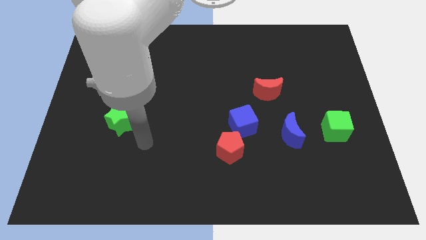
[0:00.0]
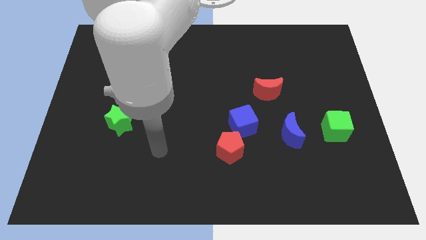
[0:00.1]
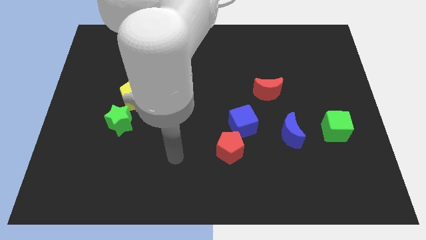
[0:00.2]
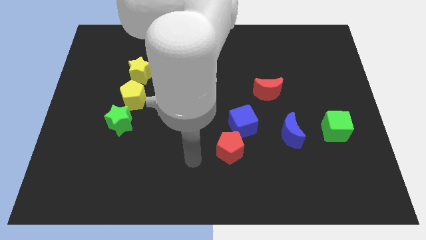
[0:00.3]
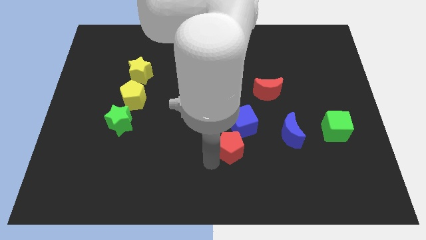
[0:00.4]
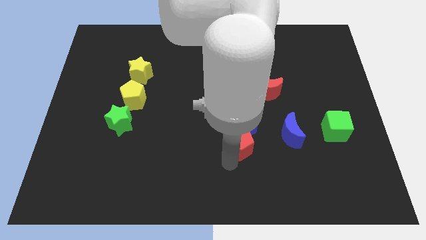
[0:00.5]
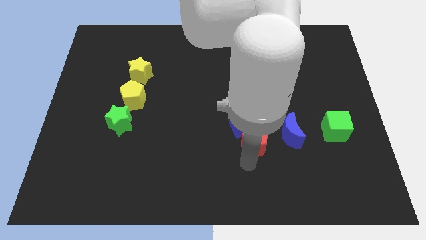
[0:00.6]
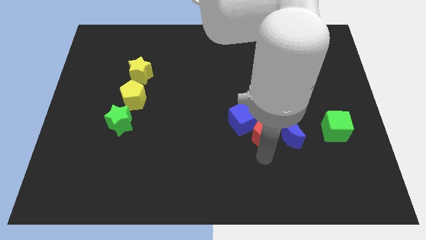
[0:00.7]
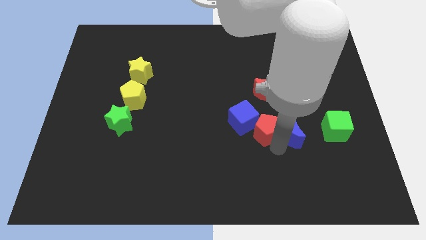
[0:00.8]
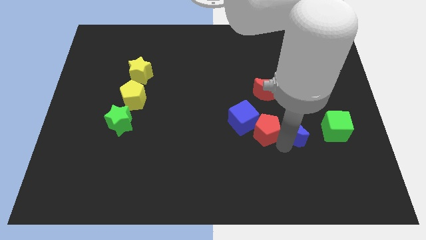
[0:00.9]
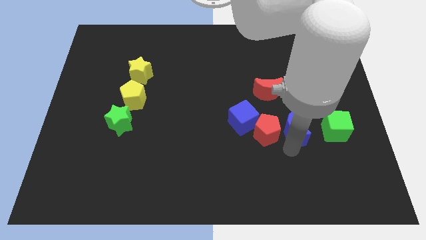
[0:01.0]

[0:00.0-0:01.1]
place the red pentagon in between the blue cube and blue moon

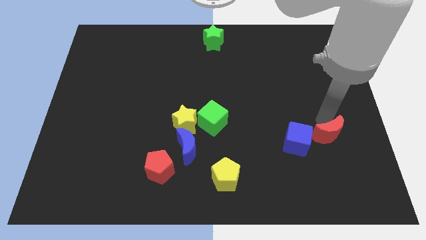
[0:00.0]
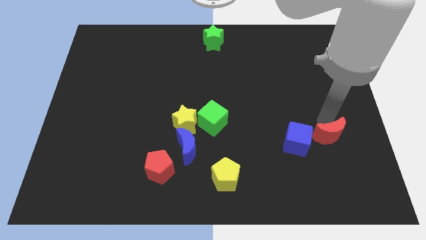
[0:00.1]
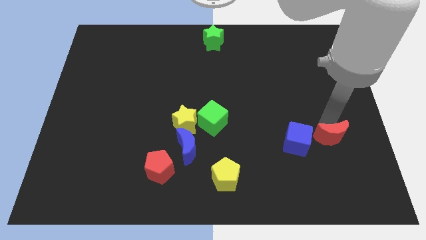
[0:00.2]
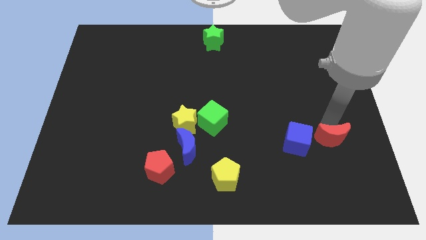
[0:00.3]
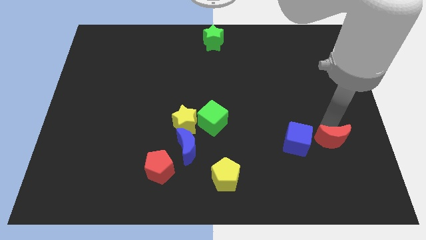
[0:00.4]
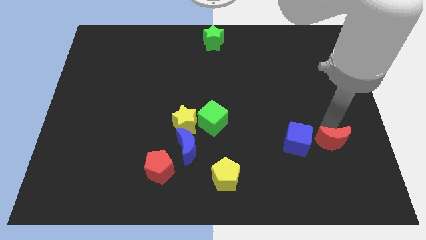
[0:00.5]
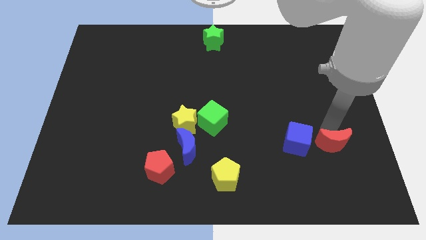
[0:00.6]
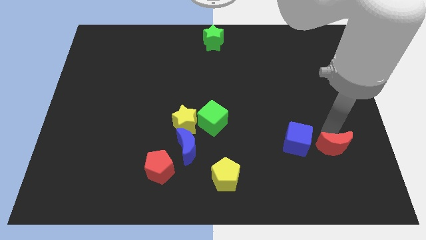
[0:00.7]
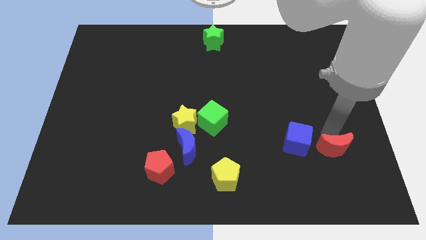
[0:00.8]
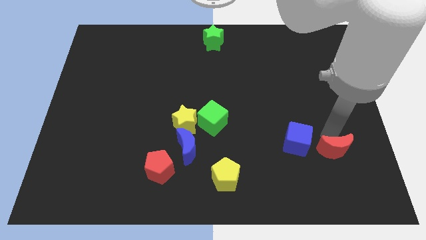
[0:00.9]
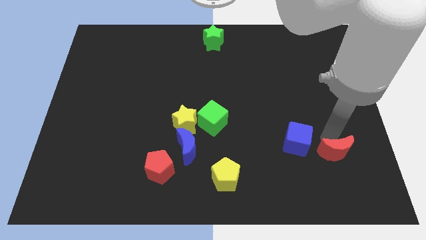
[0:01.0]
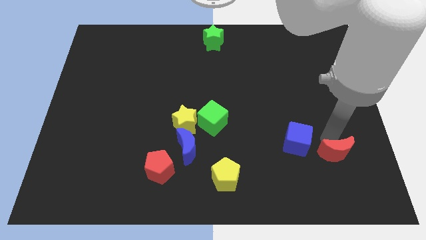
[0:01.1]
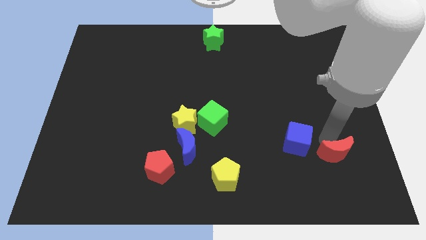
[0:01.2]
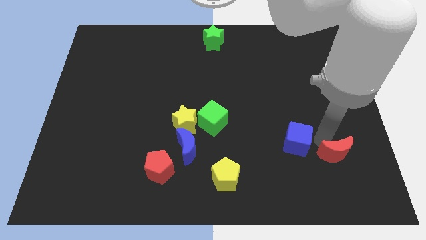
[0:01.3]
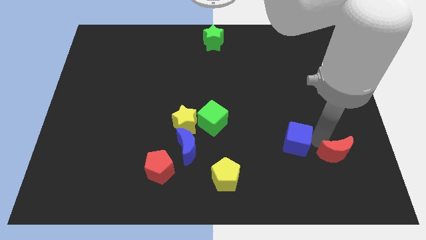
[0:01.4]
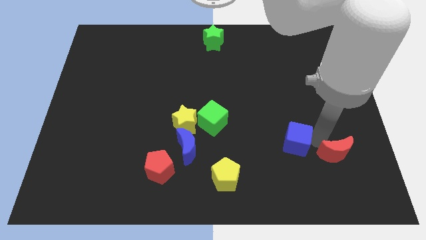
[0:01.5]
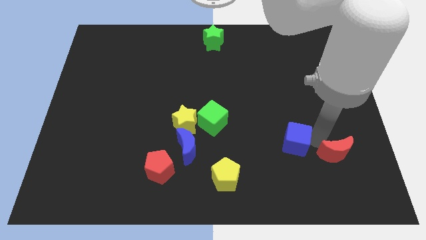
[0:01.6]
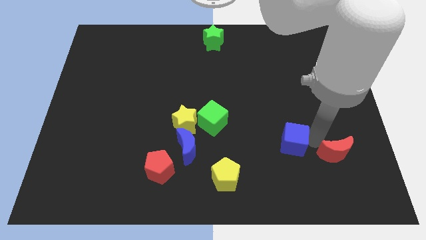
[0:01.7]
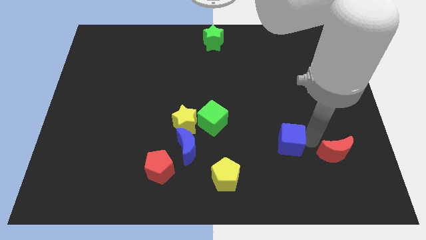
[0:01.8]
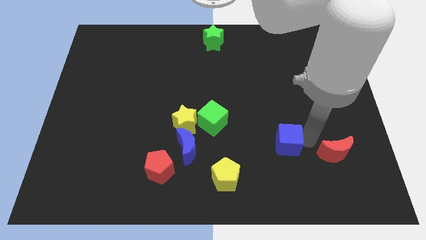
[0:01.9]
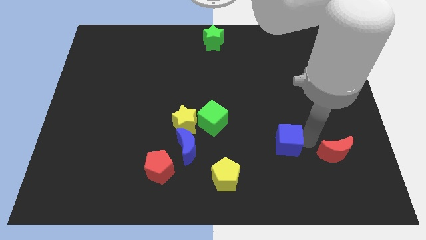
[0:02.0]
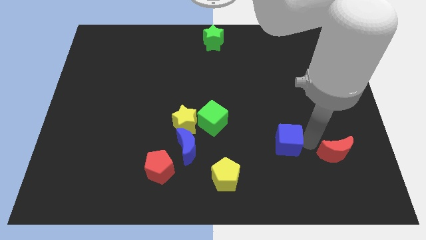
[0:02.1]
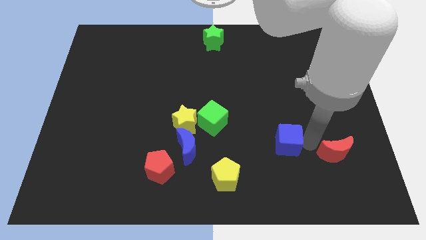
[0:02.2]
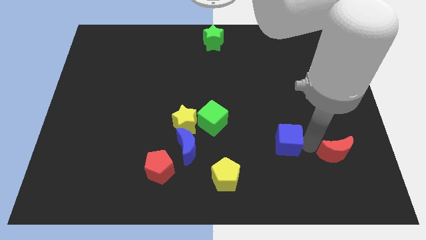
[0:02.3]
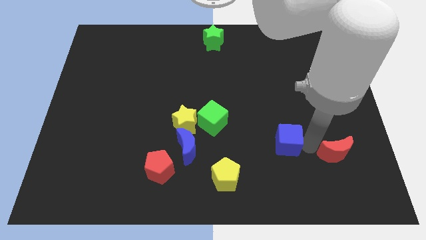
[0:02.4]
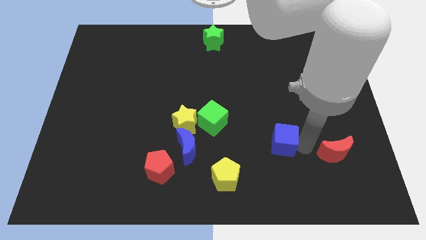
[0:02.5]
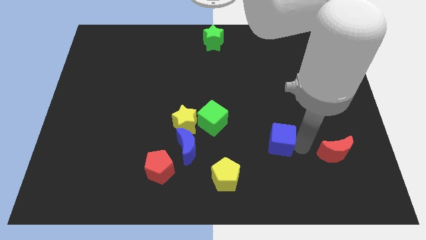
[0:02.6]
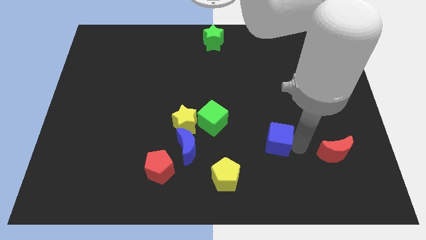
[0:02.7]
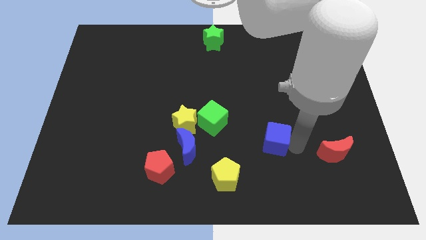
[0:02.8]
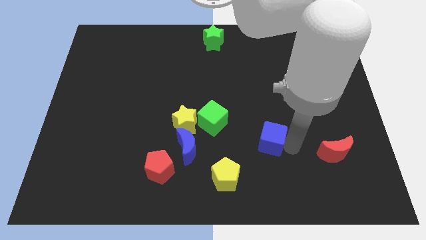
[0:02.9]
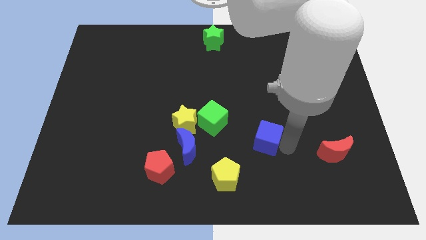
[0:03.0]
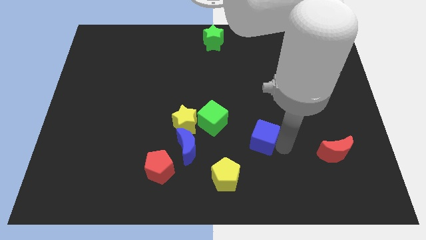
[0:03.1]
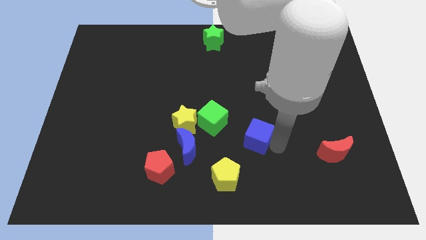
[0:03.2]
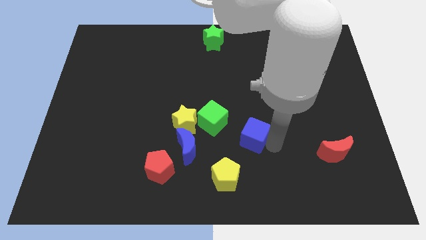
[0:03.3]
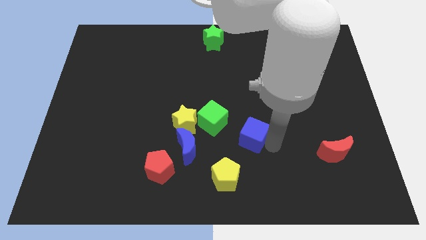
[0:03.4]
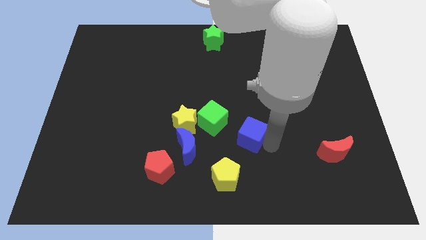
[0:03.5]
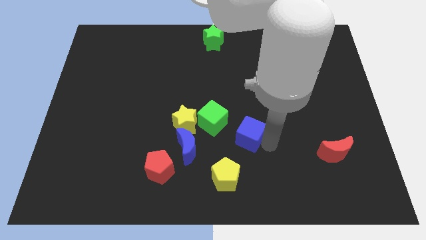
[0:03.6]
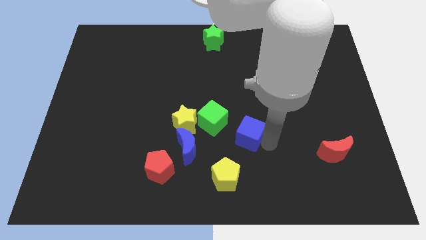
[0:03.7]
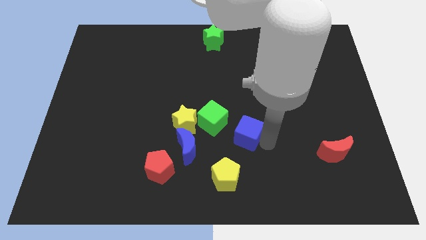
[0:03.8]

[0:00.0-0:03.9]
push the blue cube slightly to the left

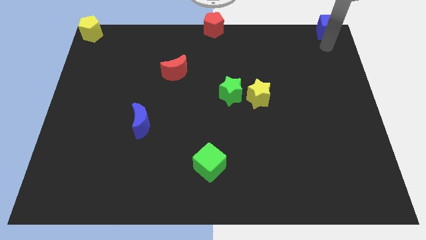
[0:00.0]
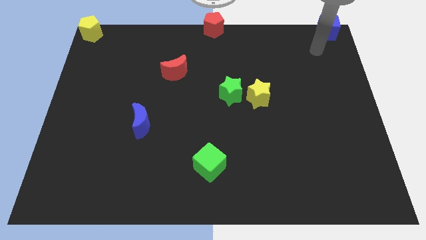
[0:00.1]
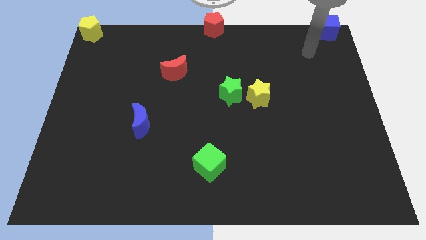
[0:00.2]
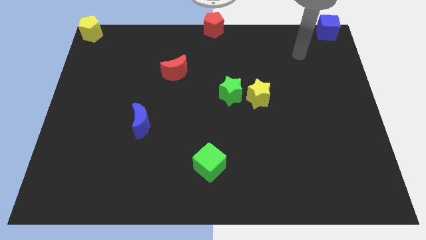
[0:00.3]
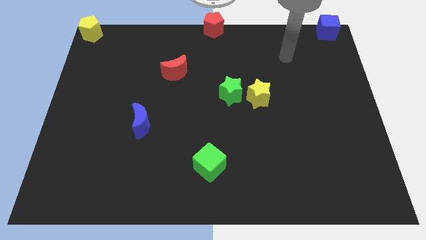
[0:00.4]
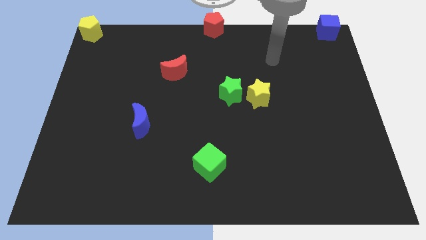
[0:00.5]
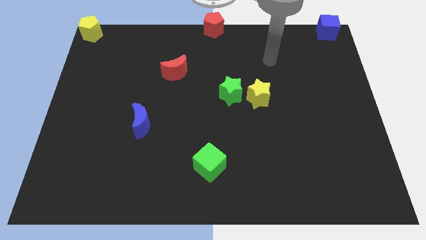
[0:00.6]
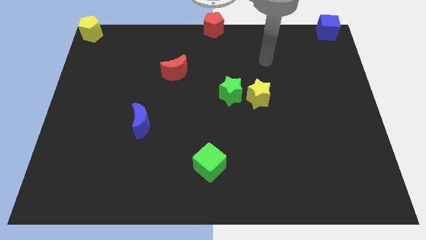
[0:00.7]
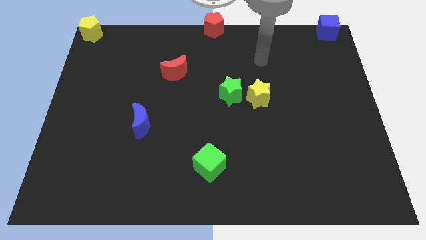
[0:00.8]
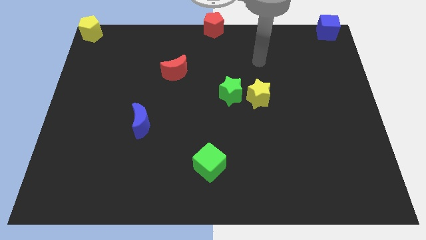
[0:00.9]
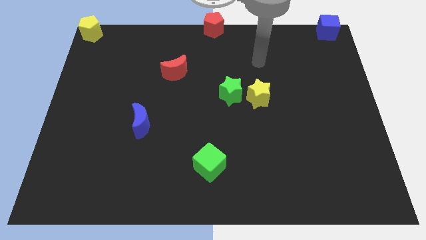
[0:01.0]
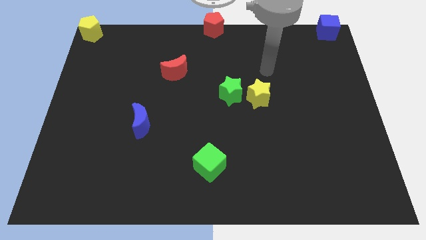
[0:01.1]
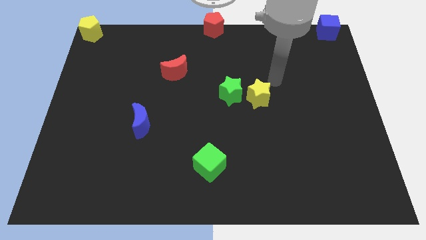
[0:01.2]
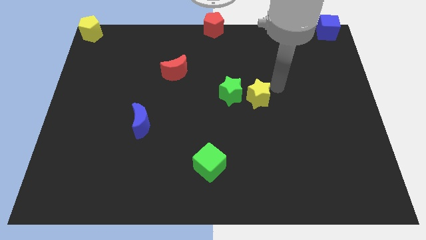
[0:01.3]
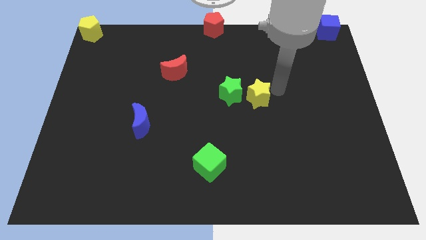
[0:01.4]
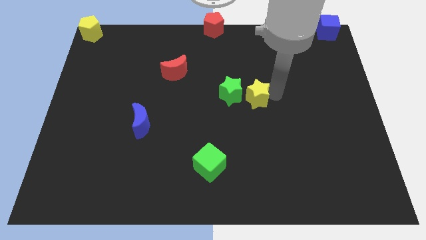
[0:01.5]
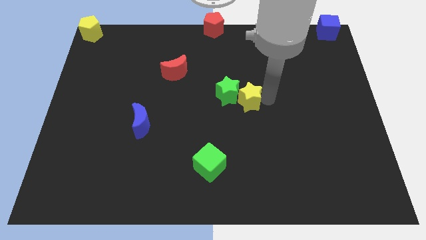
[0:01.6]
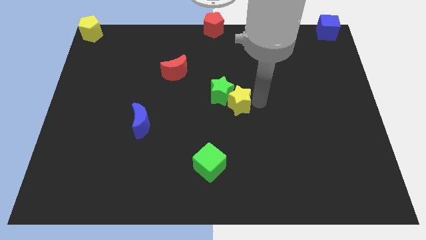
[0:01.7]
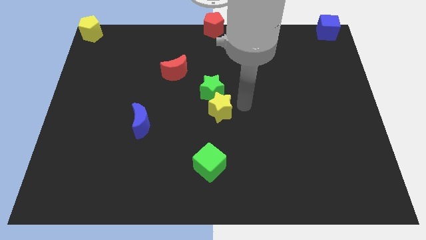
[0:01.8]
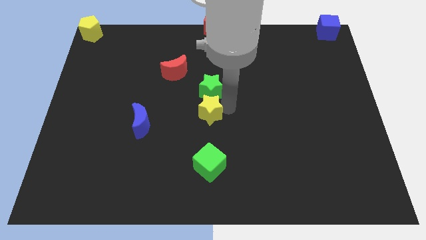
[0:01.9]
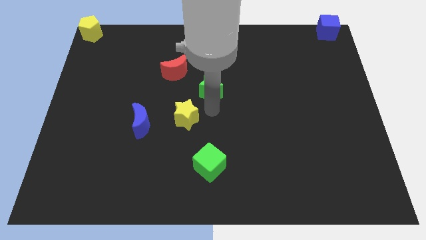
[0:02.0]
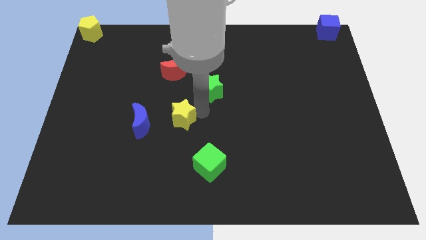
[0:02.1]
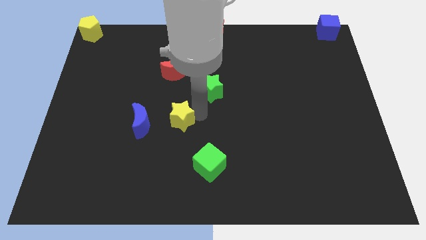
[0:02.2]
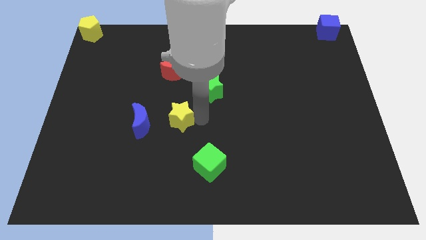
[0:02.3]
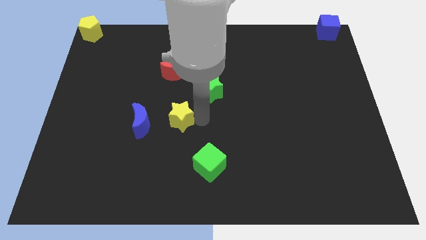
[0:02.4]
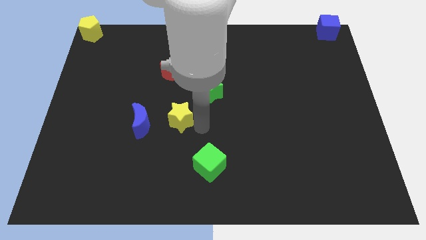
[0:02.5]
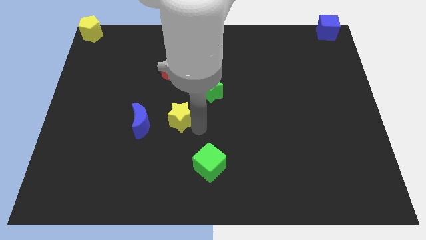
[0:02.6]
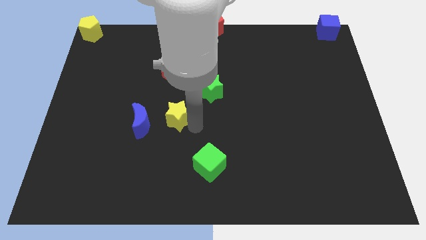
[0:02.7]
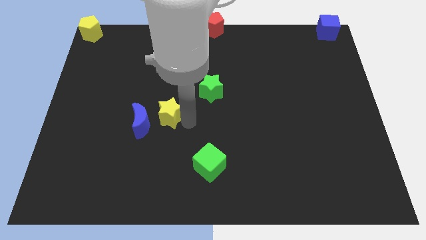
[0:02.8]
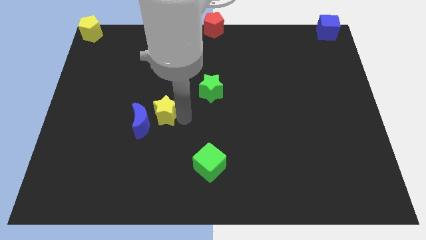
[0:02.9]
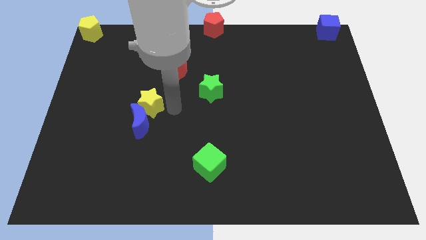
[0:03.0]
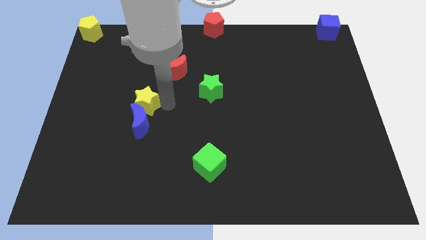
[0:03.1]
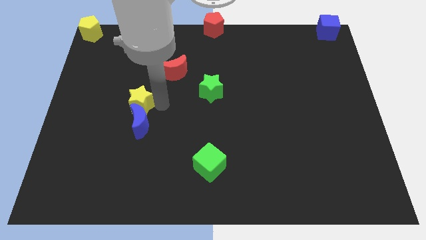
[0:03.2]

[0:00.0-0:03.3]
place yellow star to the top of blue moon

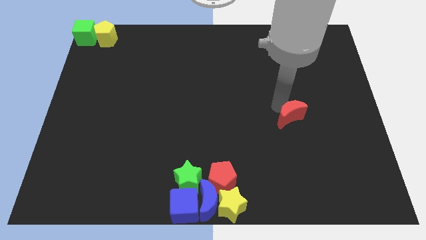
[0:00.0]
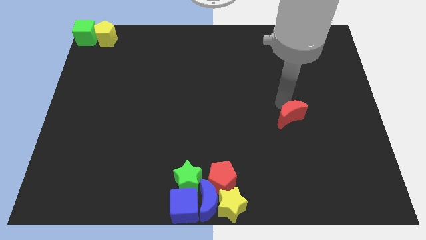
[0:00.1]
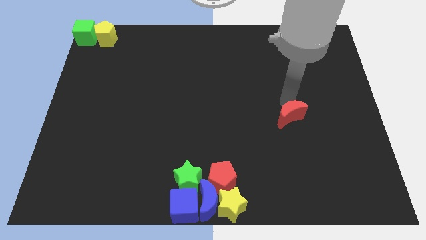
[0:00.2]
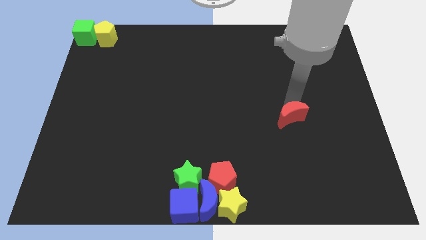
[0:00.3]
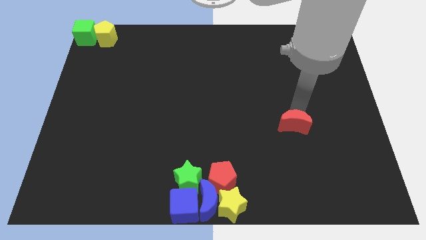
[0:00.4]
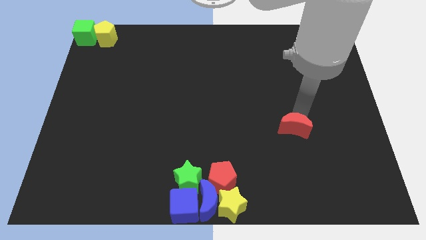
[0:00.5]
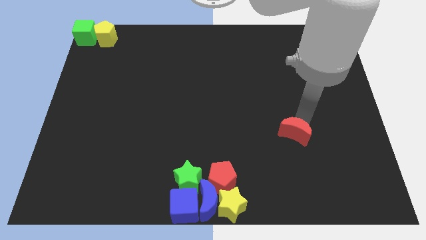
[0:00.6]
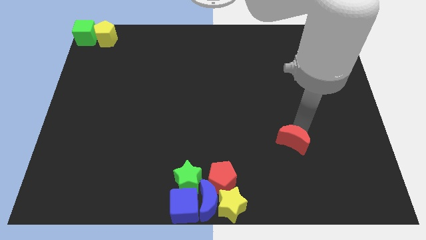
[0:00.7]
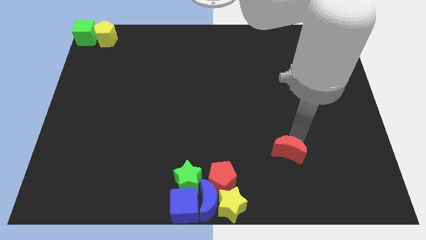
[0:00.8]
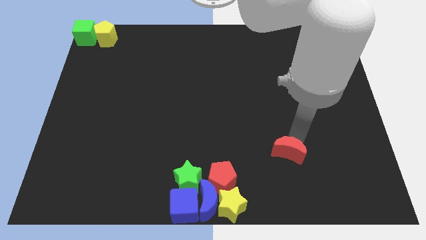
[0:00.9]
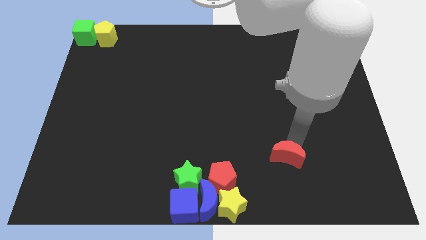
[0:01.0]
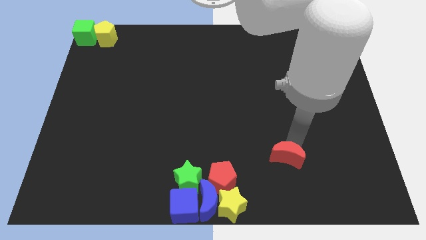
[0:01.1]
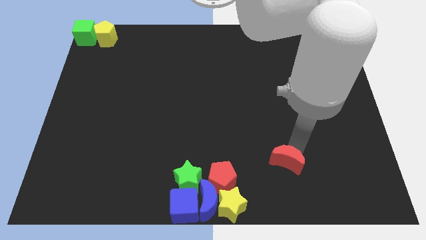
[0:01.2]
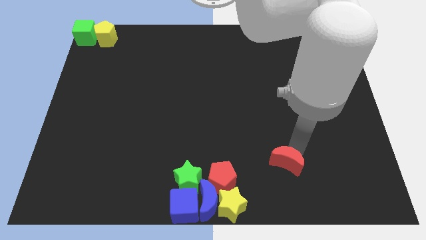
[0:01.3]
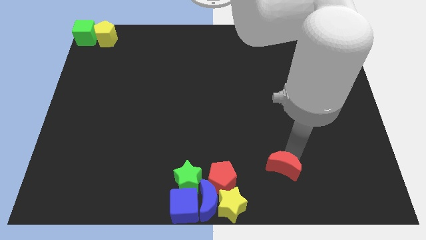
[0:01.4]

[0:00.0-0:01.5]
place the red crescent to the right of the red pentagon
